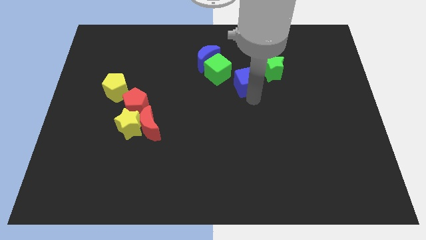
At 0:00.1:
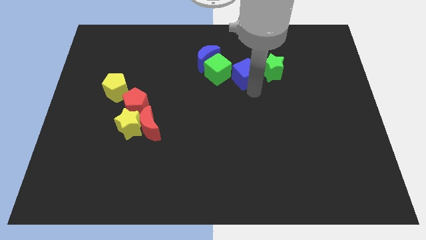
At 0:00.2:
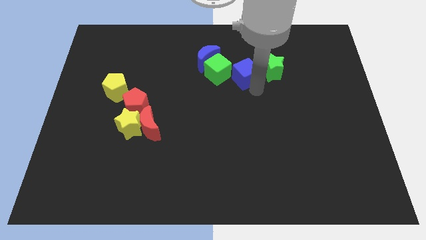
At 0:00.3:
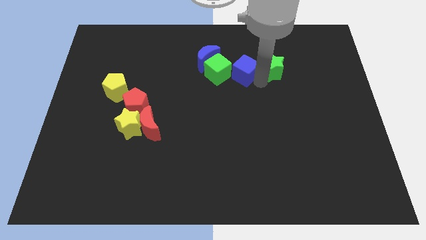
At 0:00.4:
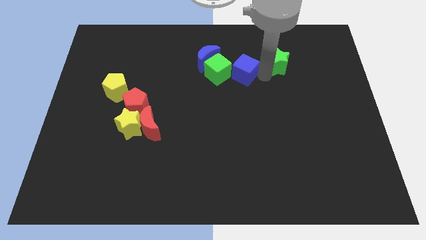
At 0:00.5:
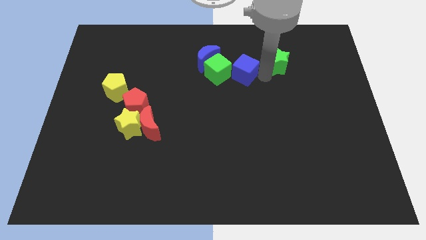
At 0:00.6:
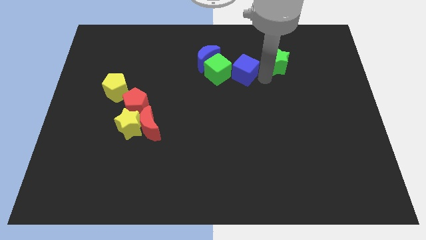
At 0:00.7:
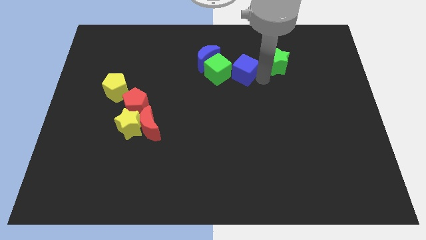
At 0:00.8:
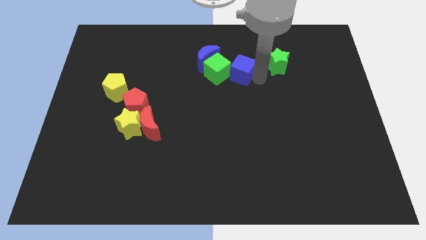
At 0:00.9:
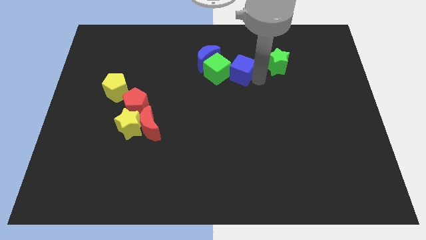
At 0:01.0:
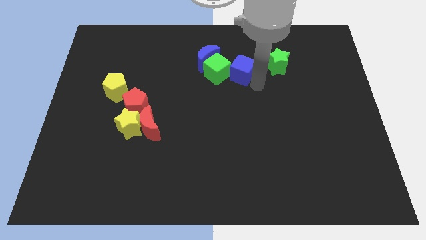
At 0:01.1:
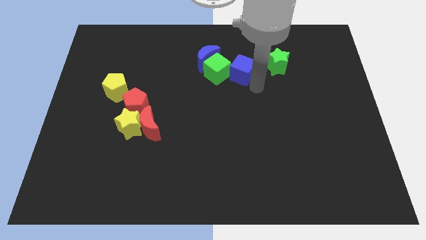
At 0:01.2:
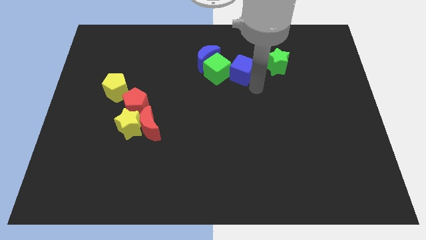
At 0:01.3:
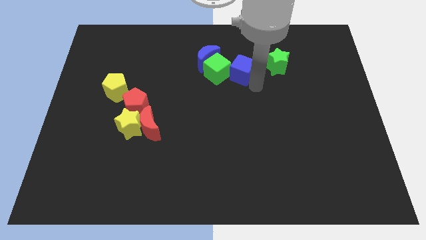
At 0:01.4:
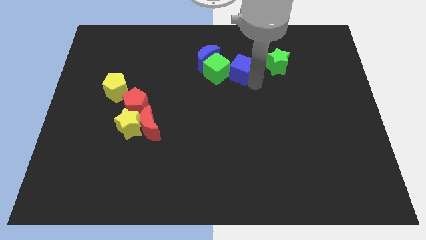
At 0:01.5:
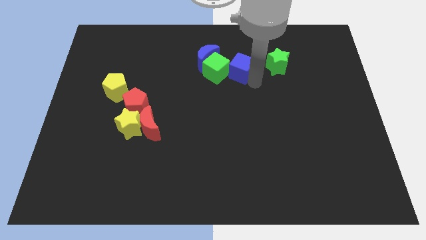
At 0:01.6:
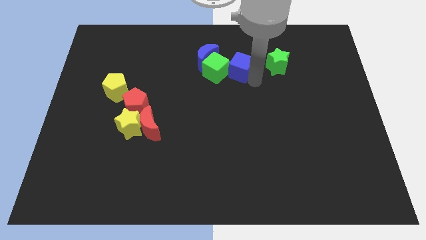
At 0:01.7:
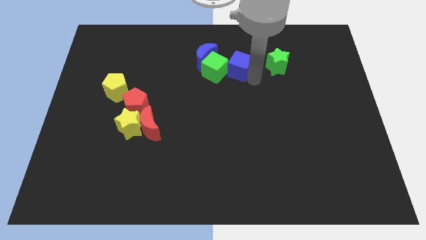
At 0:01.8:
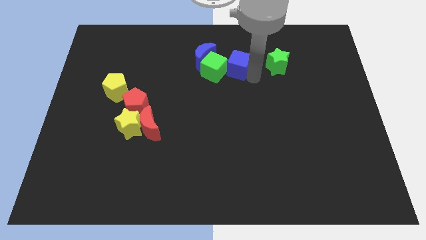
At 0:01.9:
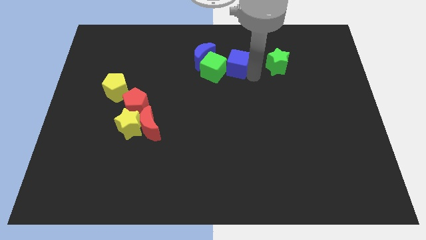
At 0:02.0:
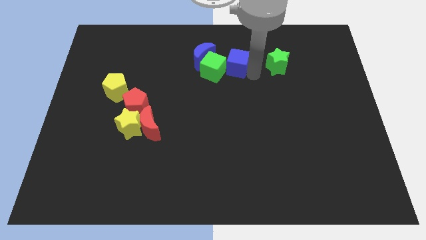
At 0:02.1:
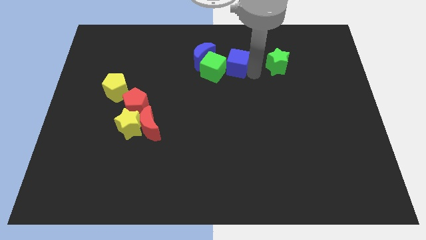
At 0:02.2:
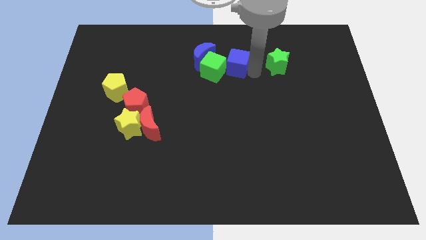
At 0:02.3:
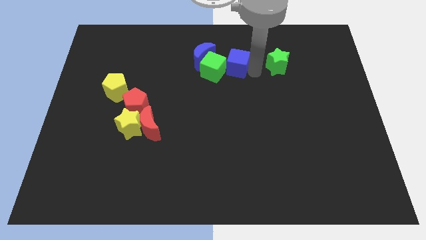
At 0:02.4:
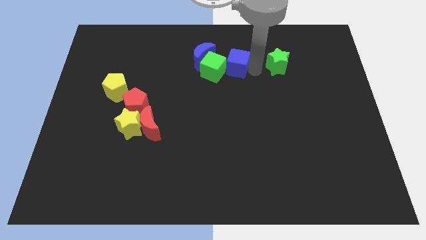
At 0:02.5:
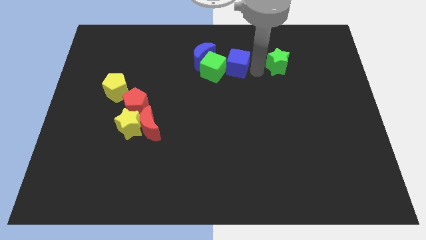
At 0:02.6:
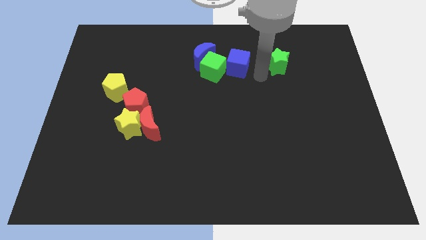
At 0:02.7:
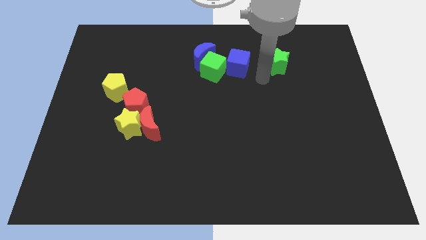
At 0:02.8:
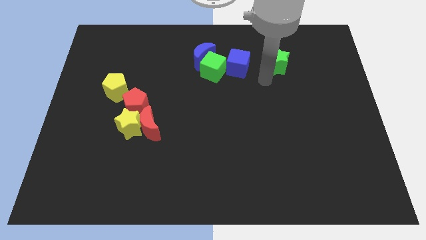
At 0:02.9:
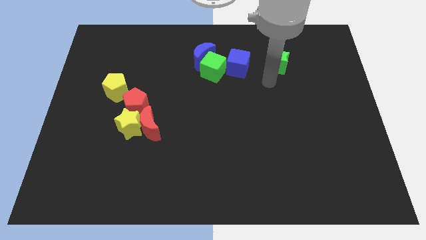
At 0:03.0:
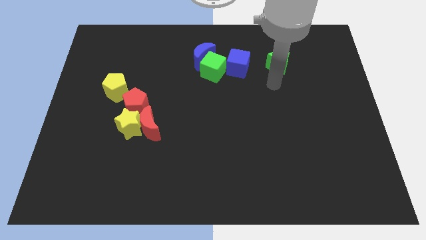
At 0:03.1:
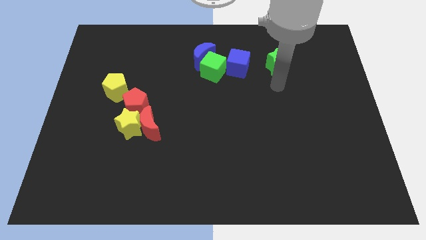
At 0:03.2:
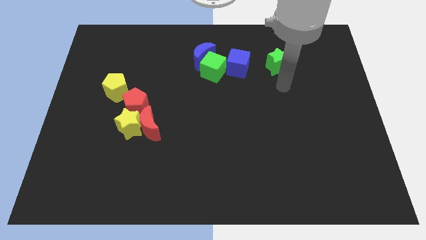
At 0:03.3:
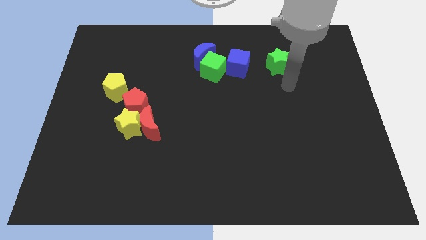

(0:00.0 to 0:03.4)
place your arm at the bottom side of the green star

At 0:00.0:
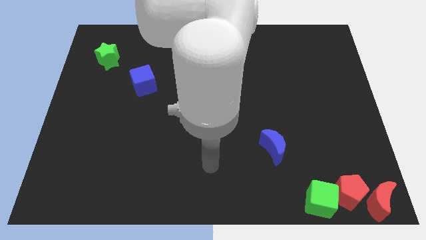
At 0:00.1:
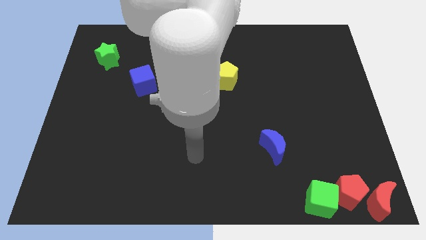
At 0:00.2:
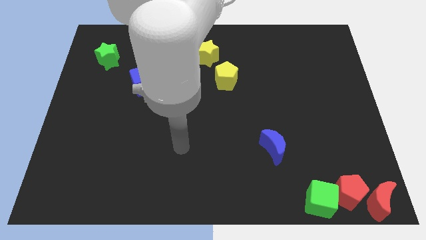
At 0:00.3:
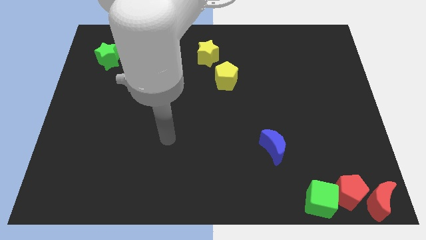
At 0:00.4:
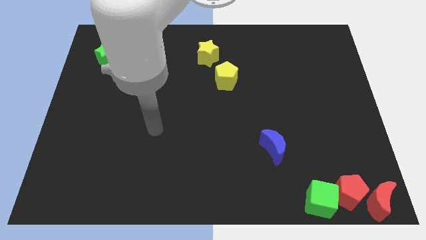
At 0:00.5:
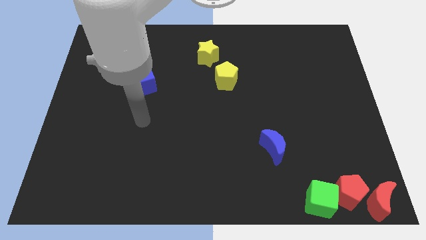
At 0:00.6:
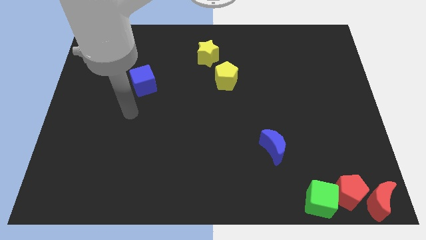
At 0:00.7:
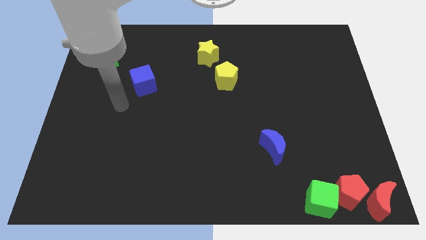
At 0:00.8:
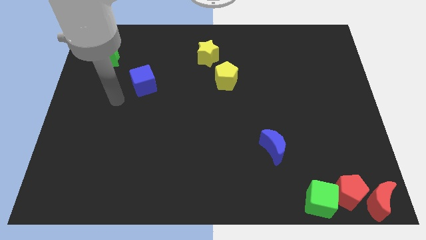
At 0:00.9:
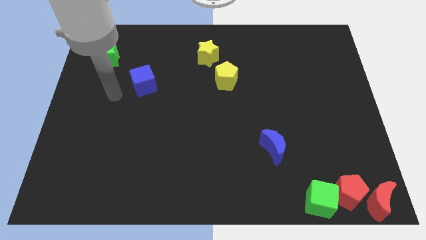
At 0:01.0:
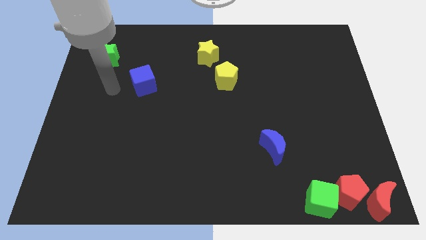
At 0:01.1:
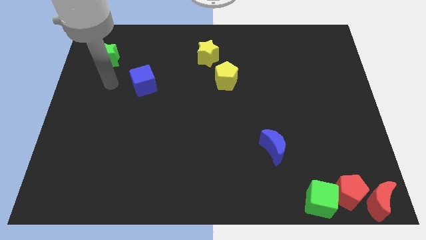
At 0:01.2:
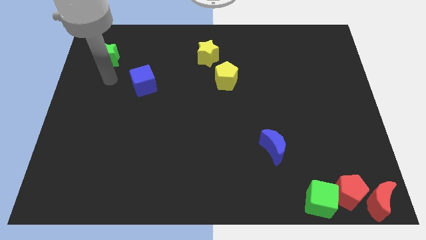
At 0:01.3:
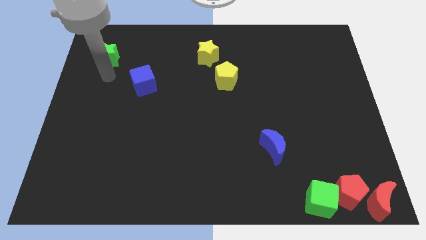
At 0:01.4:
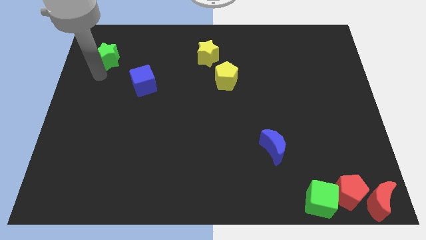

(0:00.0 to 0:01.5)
move your arm towards the green star

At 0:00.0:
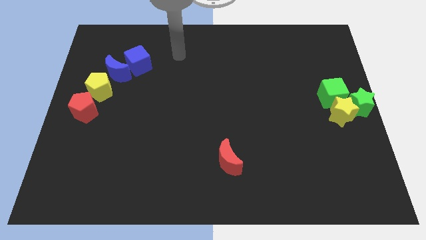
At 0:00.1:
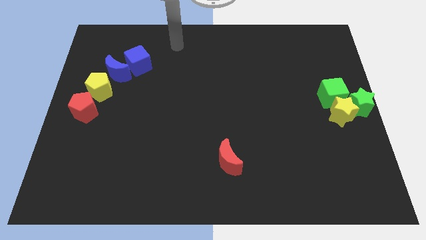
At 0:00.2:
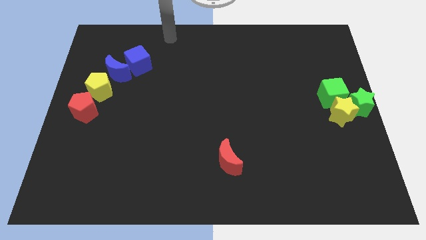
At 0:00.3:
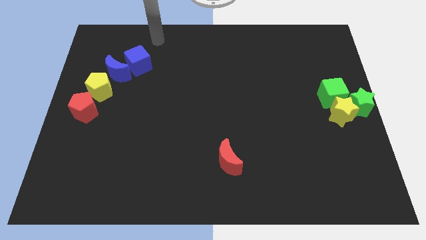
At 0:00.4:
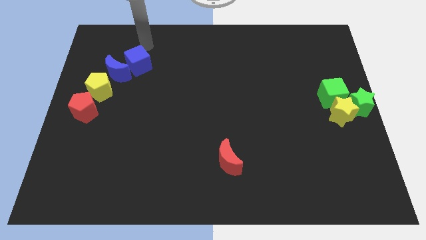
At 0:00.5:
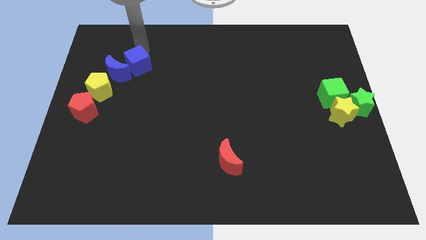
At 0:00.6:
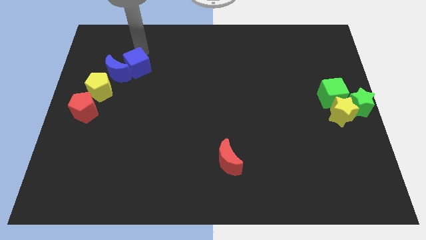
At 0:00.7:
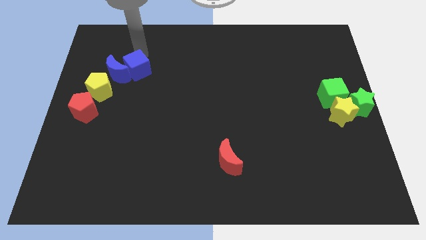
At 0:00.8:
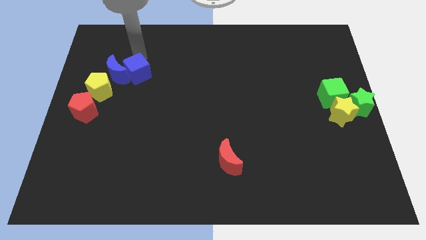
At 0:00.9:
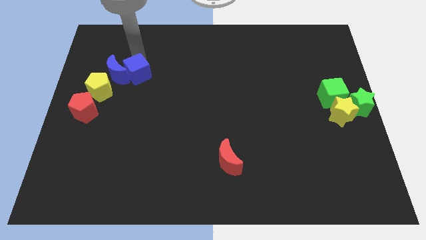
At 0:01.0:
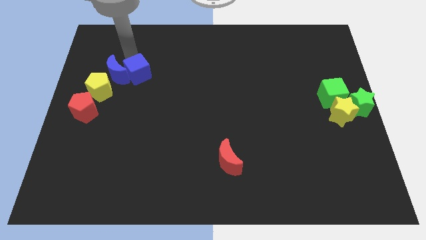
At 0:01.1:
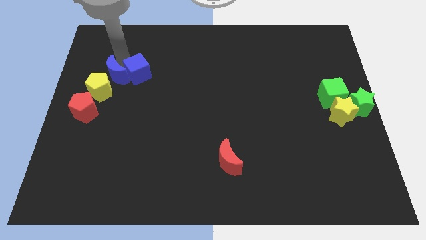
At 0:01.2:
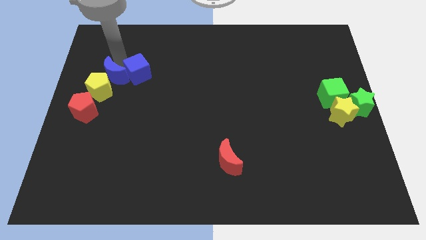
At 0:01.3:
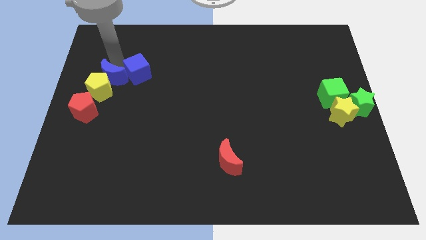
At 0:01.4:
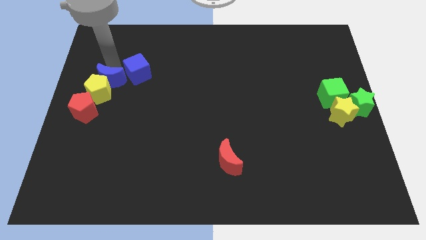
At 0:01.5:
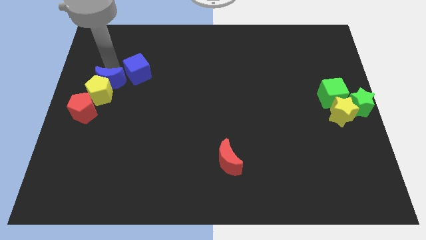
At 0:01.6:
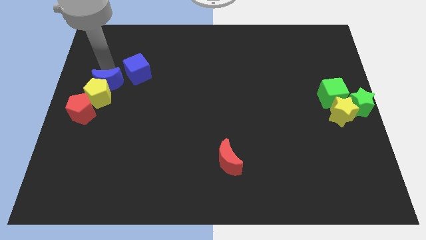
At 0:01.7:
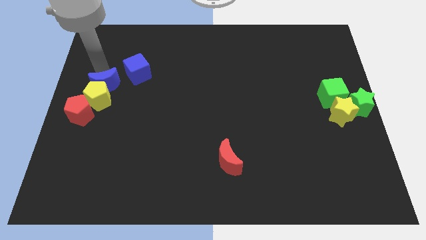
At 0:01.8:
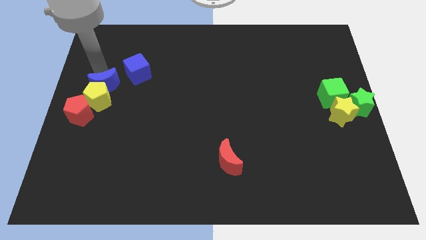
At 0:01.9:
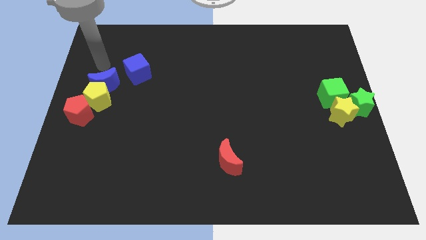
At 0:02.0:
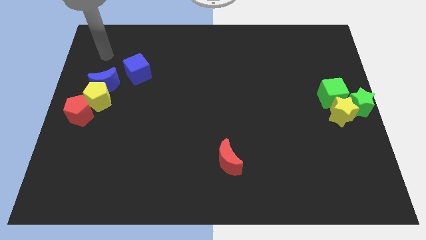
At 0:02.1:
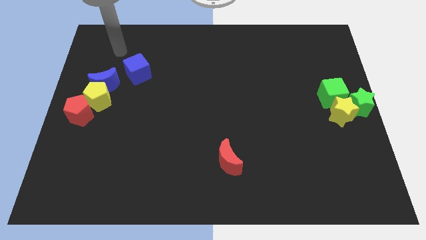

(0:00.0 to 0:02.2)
push the blue moon into the top of the yellow pentagon

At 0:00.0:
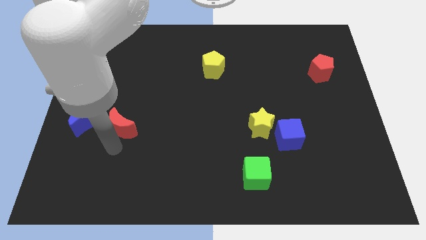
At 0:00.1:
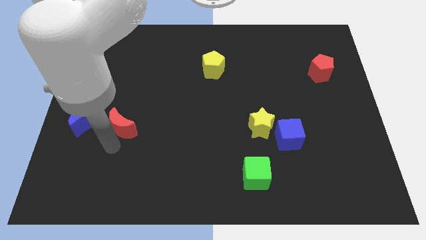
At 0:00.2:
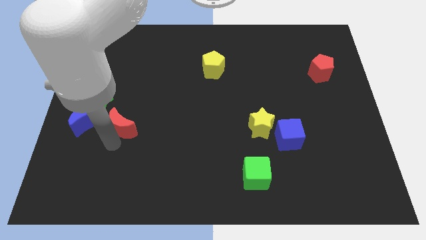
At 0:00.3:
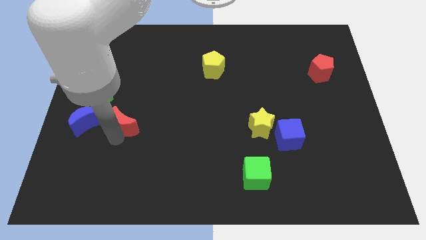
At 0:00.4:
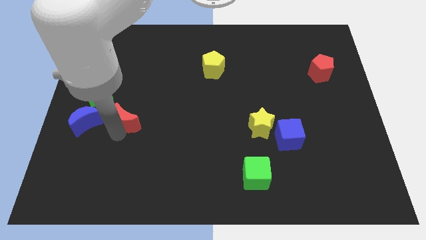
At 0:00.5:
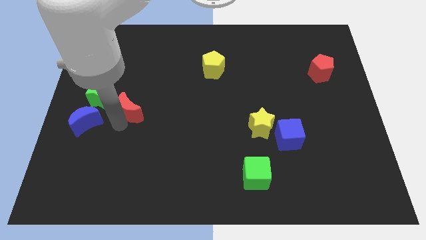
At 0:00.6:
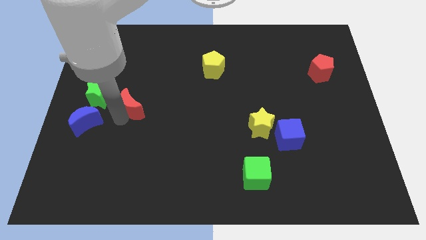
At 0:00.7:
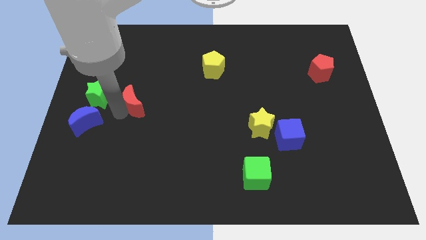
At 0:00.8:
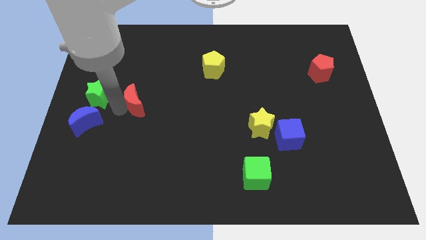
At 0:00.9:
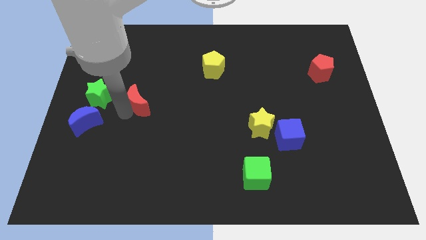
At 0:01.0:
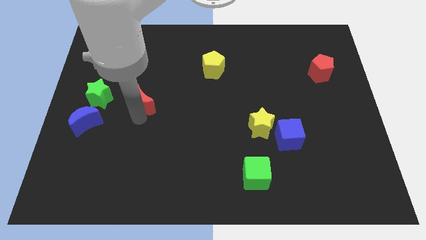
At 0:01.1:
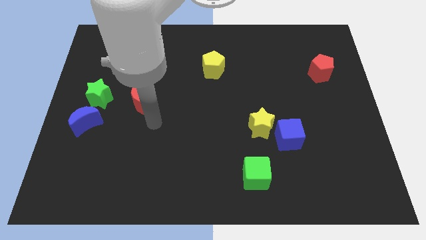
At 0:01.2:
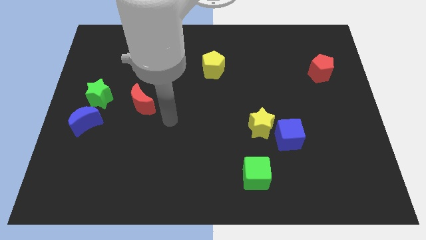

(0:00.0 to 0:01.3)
place the red crescent to the right side of the green star

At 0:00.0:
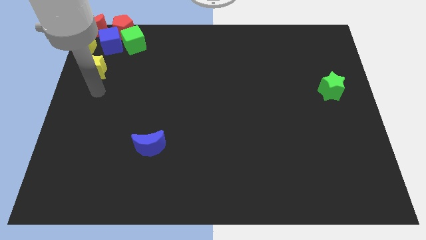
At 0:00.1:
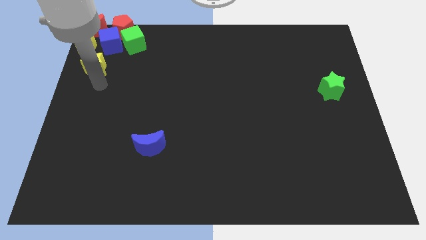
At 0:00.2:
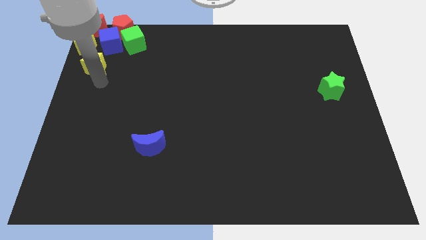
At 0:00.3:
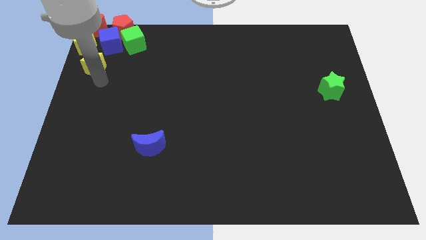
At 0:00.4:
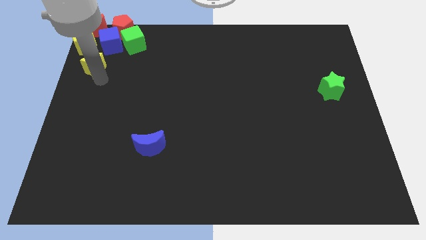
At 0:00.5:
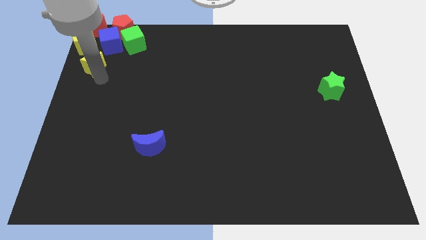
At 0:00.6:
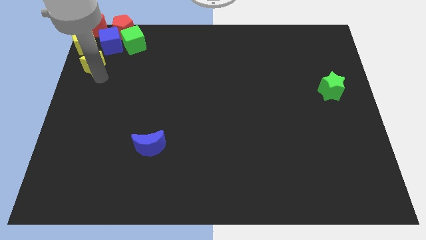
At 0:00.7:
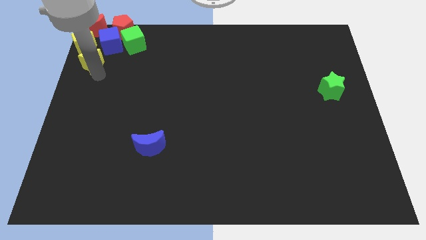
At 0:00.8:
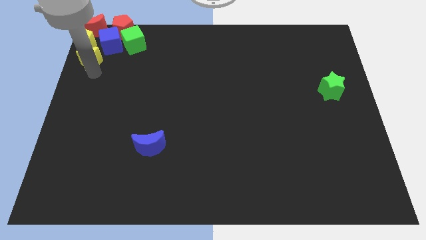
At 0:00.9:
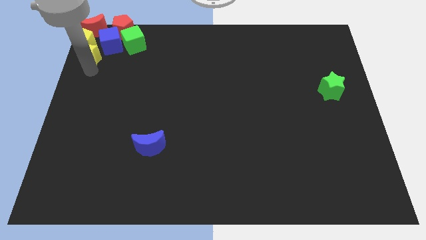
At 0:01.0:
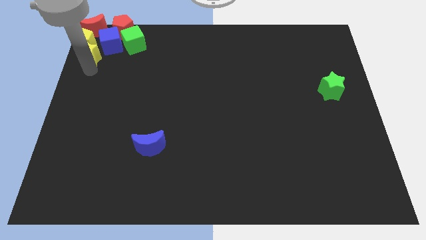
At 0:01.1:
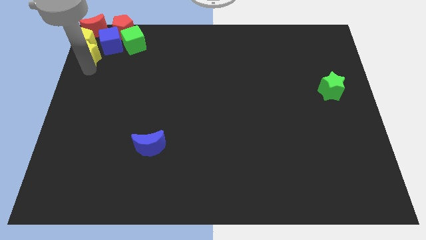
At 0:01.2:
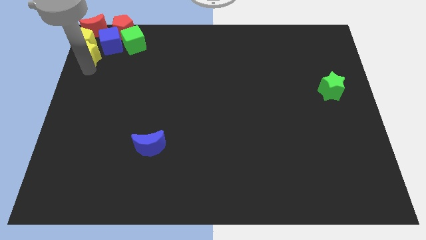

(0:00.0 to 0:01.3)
move the yellow star close to the bottom of the yellow pentagon
